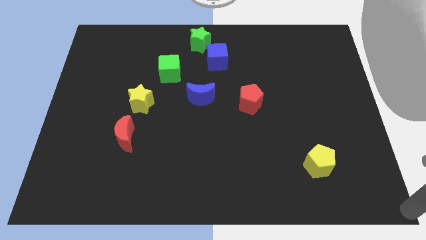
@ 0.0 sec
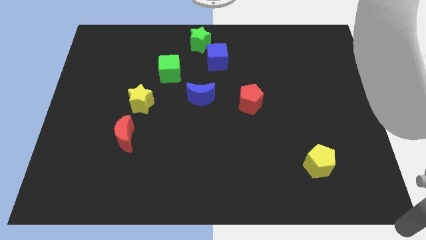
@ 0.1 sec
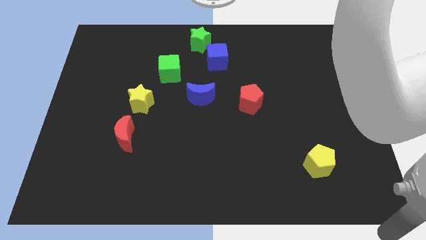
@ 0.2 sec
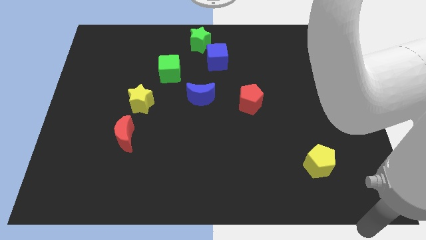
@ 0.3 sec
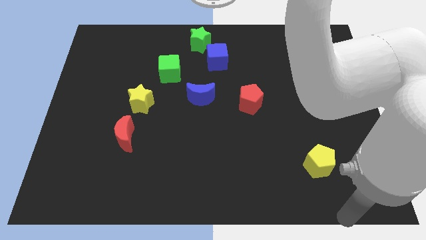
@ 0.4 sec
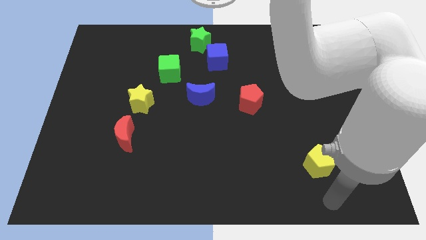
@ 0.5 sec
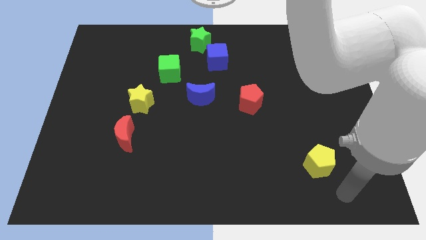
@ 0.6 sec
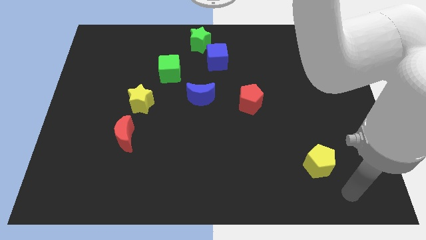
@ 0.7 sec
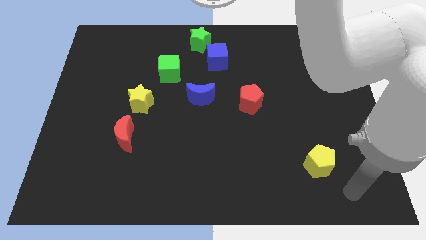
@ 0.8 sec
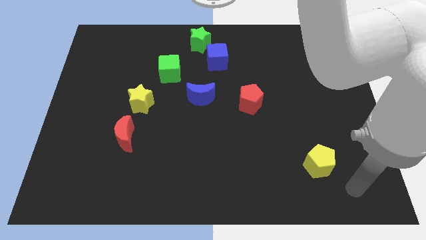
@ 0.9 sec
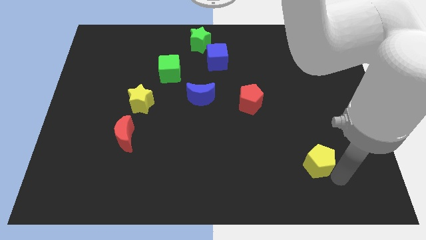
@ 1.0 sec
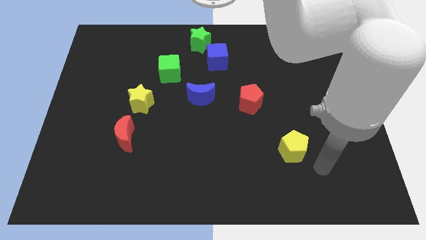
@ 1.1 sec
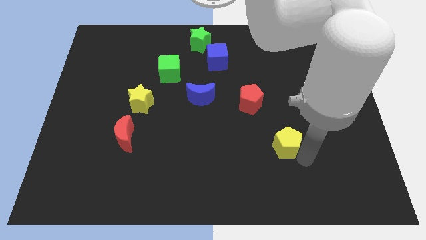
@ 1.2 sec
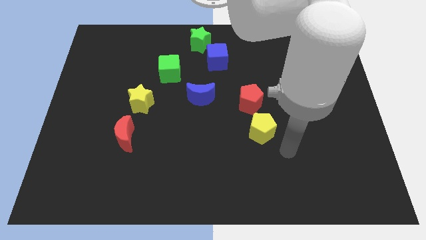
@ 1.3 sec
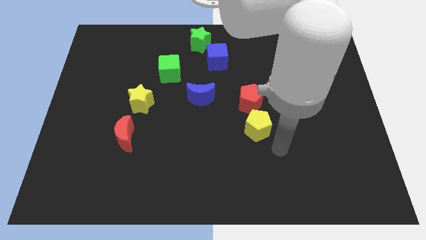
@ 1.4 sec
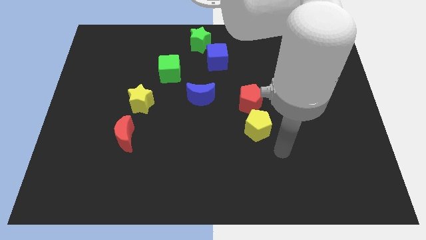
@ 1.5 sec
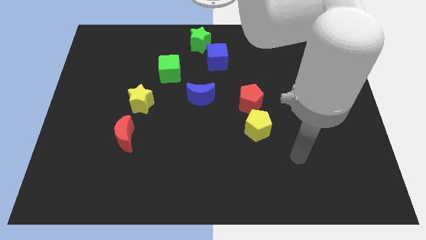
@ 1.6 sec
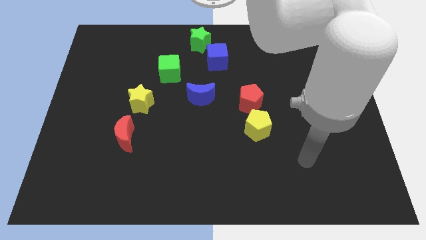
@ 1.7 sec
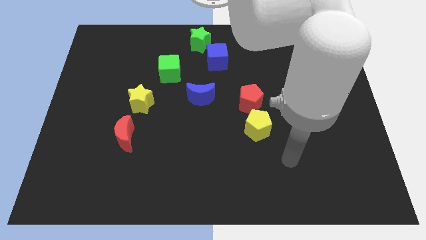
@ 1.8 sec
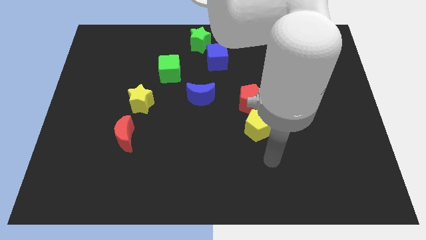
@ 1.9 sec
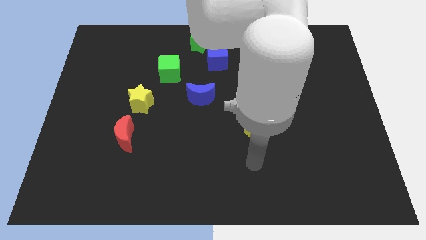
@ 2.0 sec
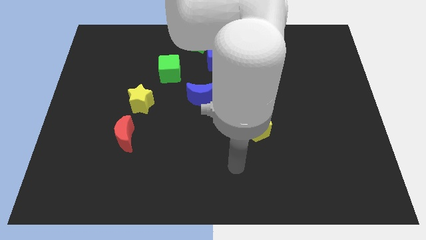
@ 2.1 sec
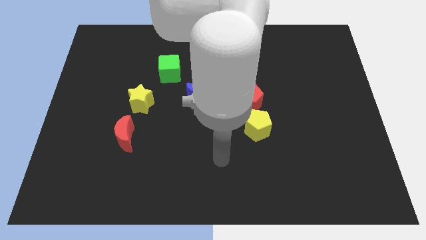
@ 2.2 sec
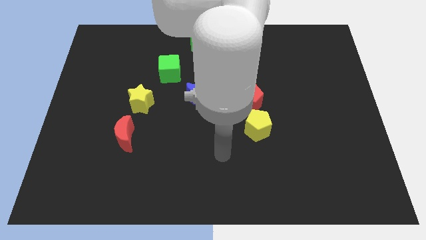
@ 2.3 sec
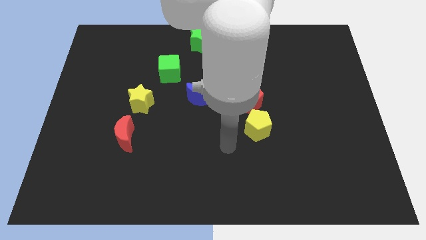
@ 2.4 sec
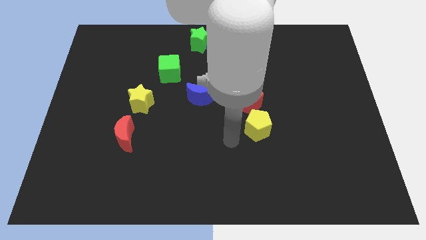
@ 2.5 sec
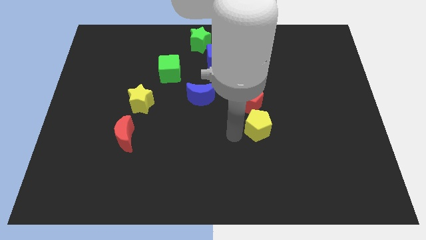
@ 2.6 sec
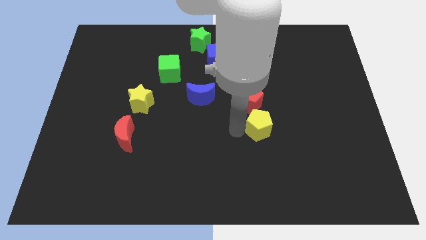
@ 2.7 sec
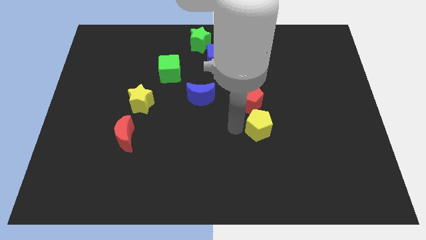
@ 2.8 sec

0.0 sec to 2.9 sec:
move the yellow pentagon below the red penatgon

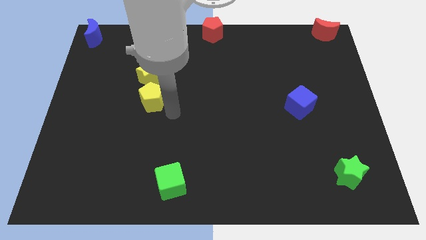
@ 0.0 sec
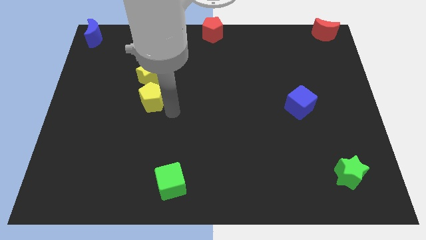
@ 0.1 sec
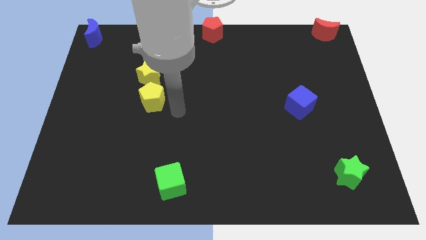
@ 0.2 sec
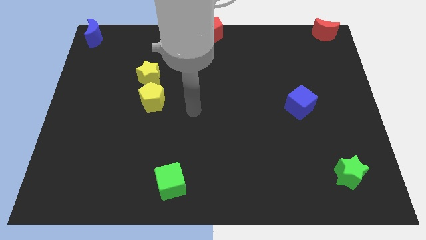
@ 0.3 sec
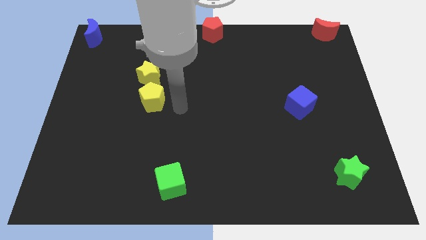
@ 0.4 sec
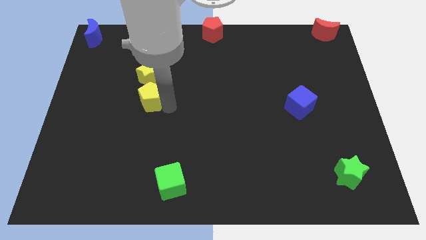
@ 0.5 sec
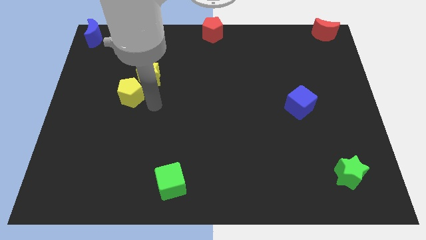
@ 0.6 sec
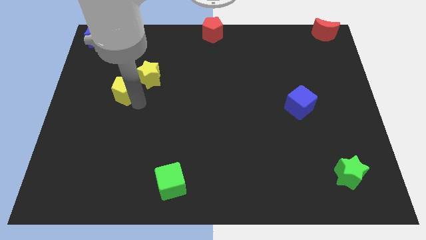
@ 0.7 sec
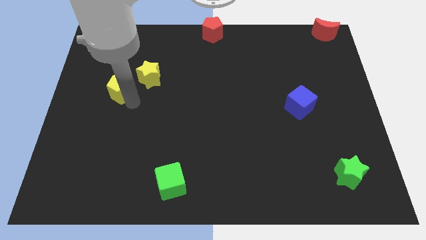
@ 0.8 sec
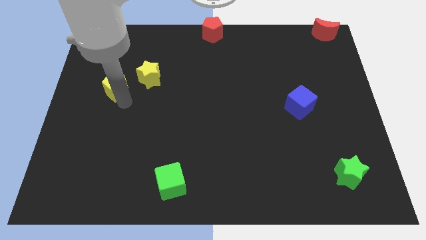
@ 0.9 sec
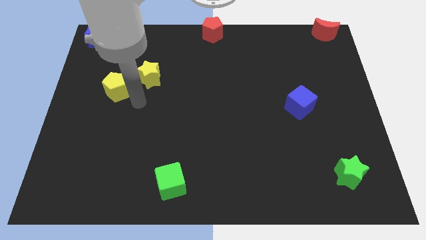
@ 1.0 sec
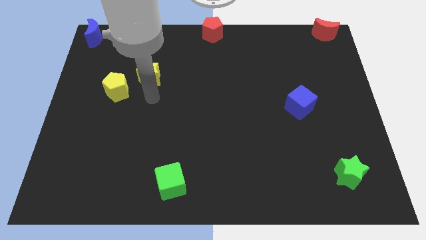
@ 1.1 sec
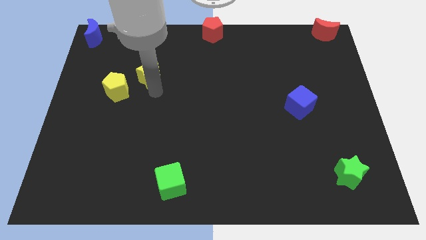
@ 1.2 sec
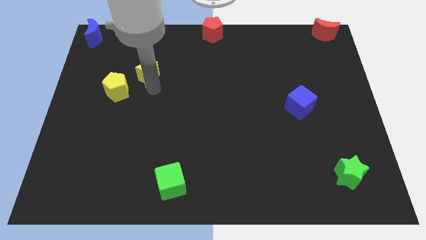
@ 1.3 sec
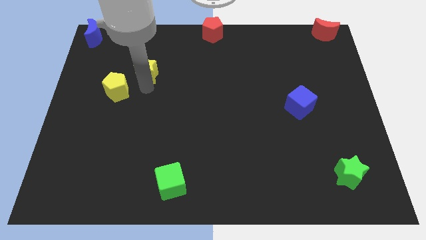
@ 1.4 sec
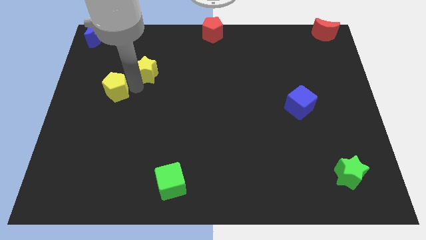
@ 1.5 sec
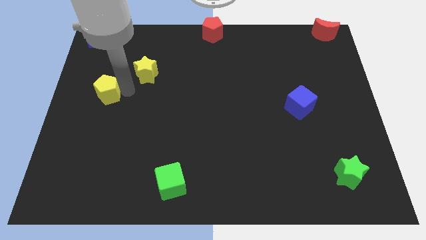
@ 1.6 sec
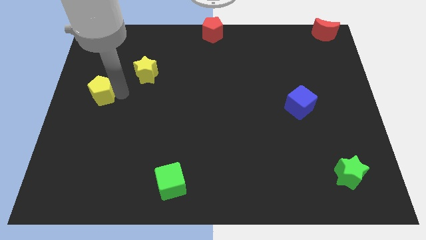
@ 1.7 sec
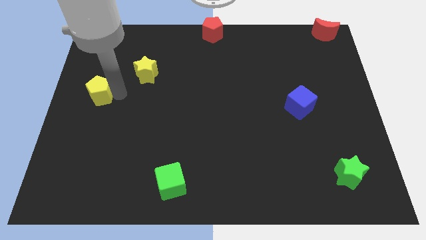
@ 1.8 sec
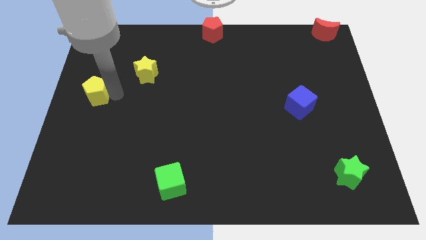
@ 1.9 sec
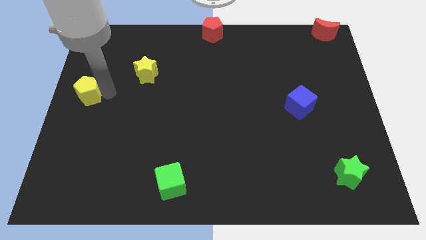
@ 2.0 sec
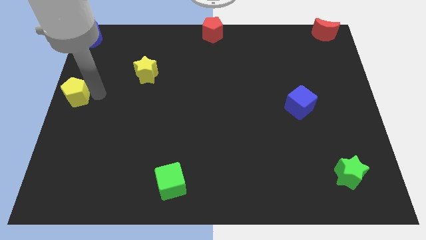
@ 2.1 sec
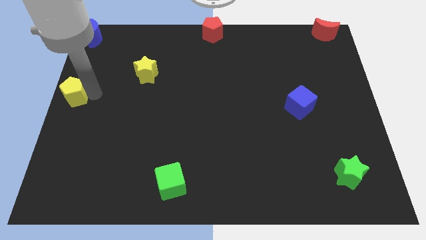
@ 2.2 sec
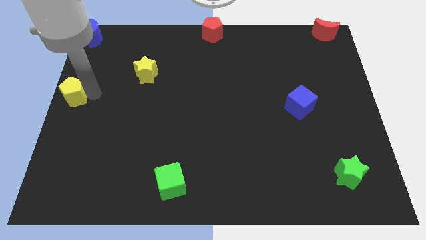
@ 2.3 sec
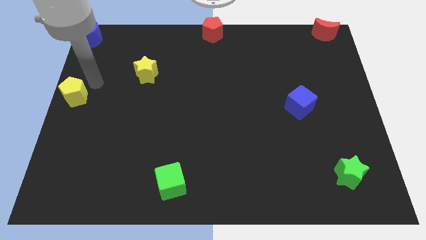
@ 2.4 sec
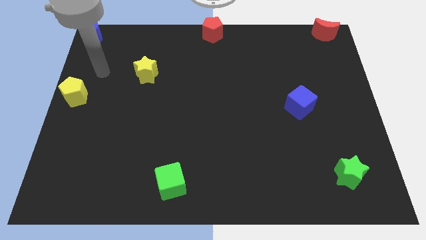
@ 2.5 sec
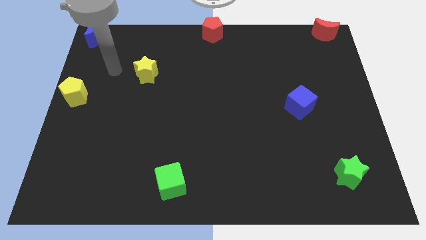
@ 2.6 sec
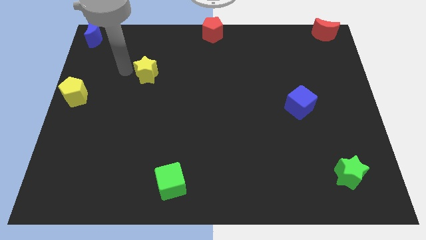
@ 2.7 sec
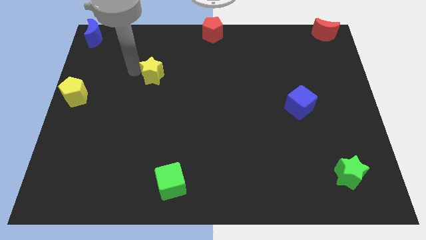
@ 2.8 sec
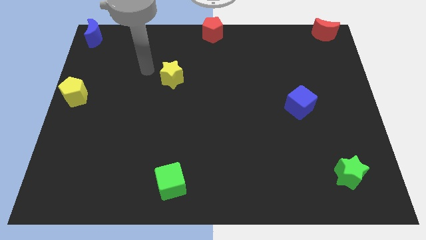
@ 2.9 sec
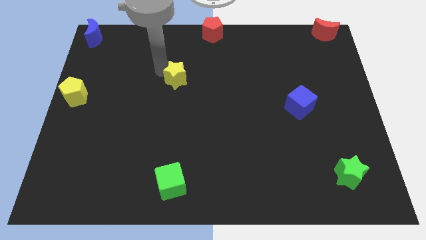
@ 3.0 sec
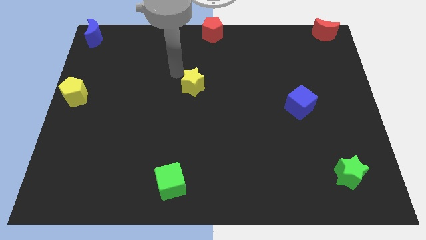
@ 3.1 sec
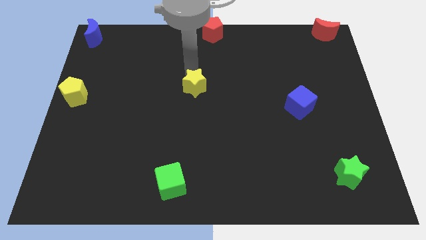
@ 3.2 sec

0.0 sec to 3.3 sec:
move yellow pentagon to left of the board

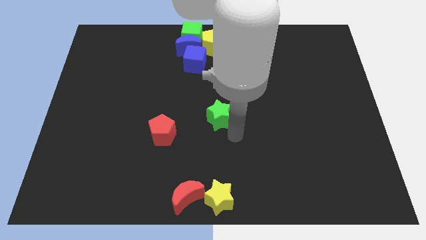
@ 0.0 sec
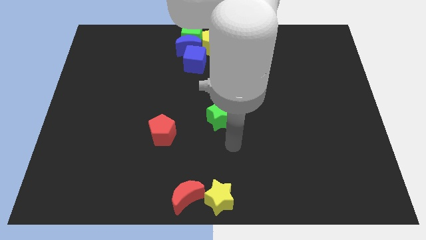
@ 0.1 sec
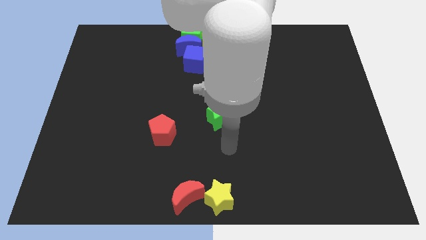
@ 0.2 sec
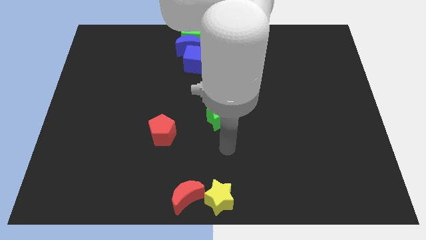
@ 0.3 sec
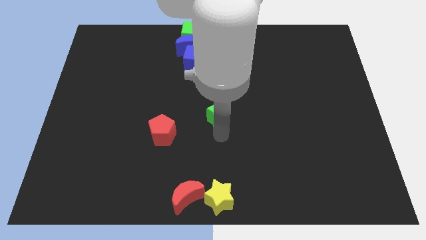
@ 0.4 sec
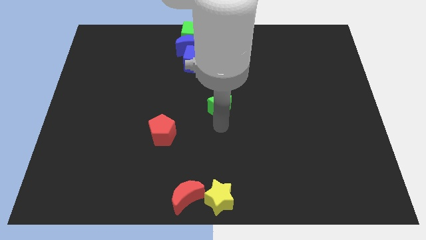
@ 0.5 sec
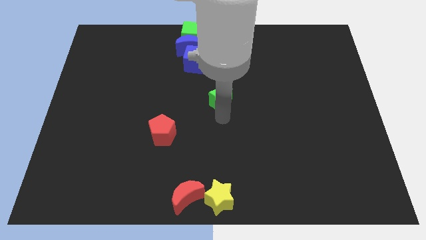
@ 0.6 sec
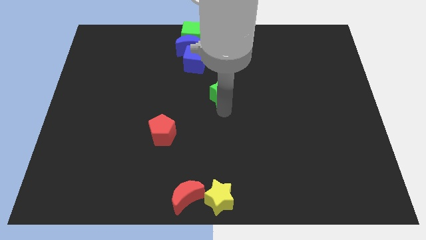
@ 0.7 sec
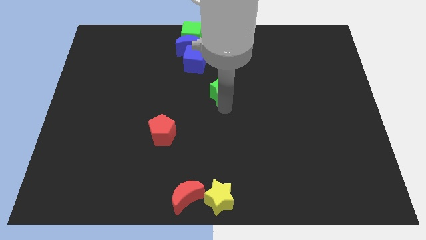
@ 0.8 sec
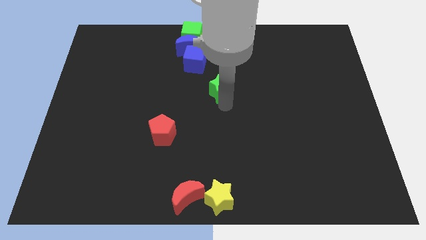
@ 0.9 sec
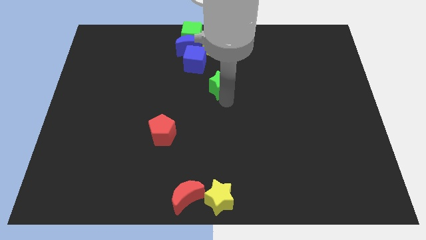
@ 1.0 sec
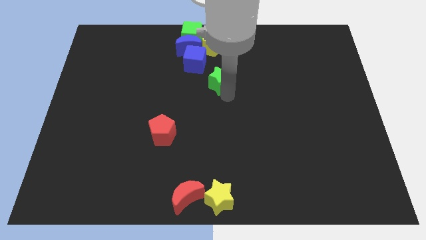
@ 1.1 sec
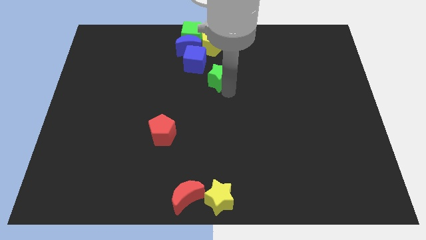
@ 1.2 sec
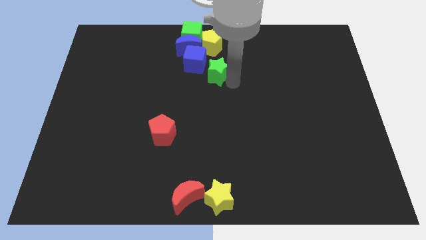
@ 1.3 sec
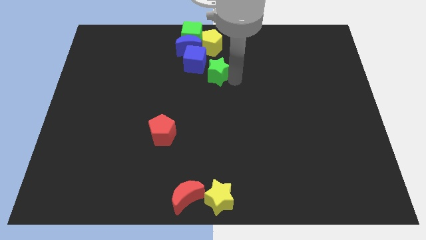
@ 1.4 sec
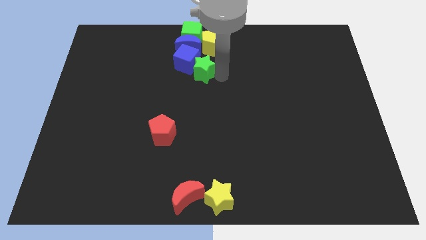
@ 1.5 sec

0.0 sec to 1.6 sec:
move the green star into the blue cube

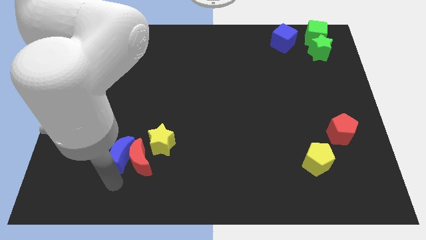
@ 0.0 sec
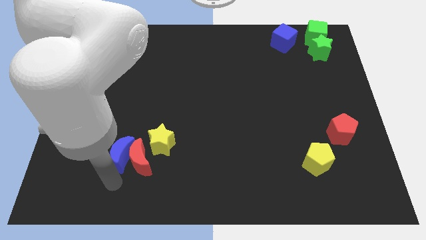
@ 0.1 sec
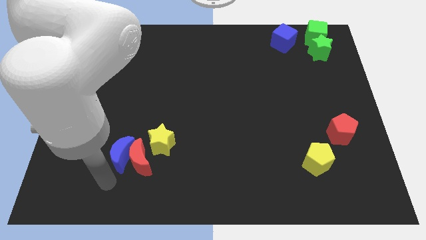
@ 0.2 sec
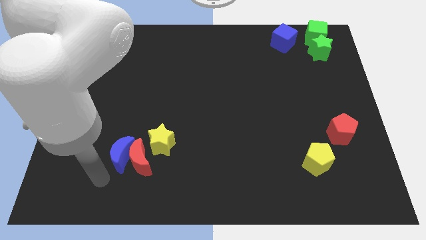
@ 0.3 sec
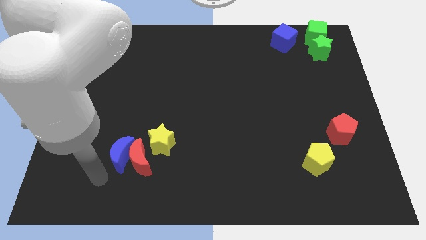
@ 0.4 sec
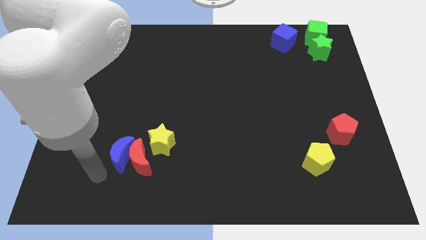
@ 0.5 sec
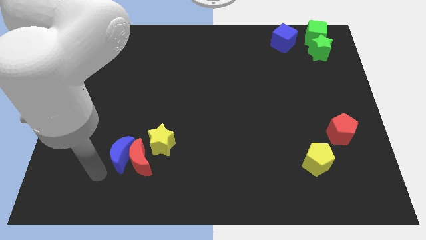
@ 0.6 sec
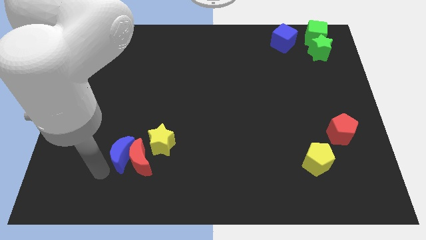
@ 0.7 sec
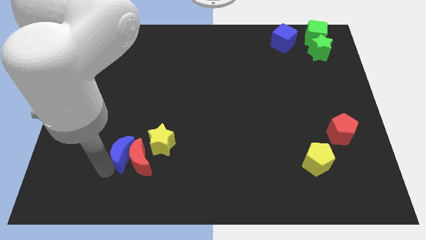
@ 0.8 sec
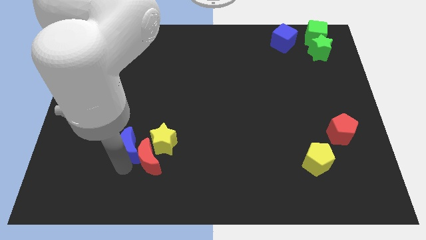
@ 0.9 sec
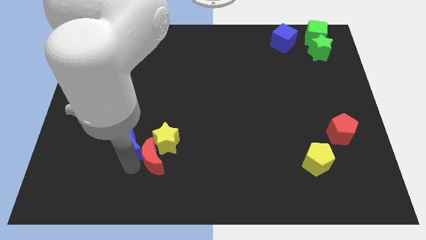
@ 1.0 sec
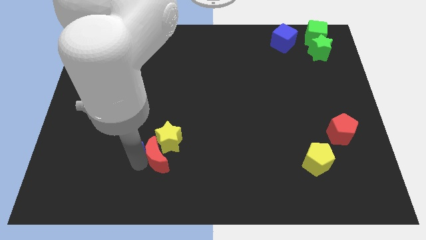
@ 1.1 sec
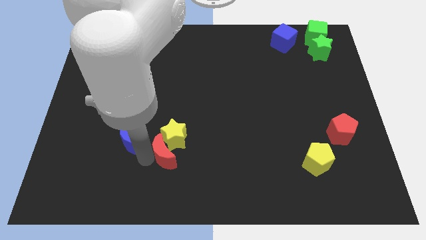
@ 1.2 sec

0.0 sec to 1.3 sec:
push the red moon and yellow star with the blue moon
